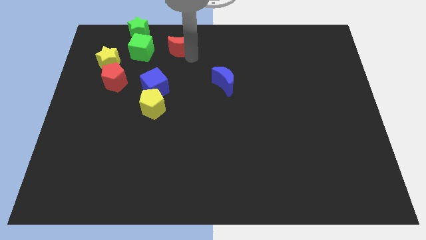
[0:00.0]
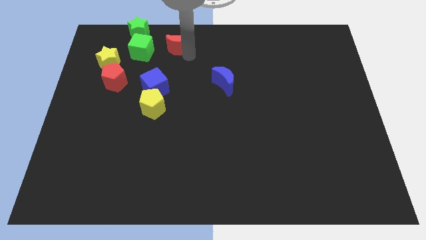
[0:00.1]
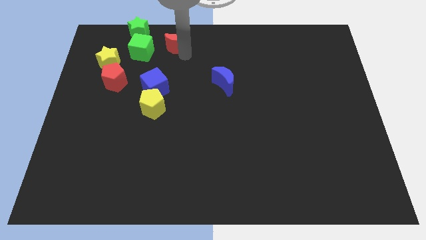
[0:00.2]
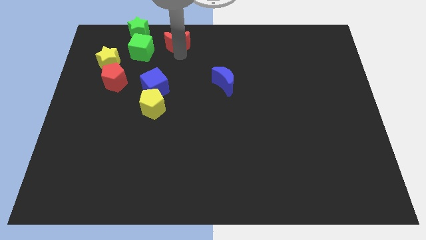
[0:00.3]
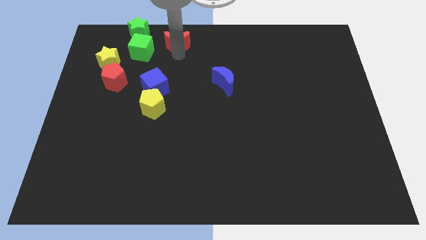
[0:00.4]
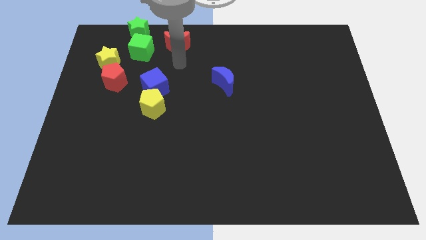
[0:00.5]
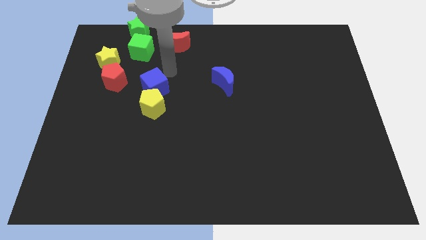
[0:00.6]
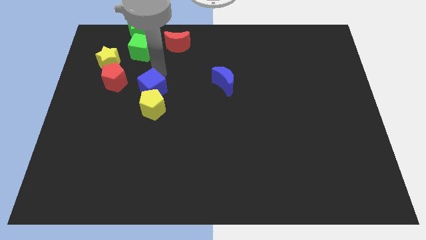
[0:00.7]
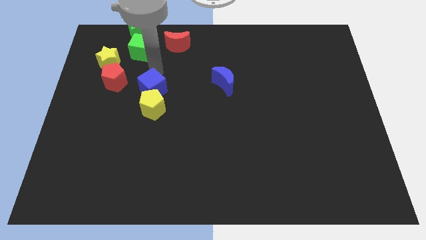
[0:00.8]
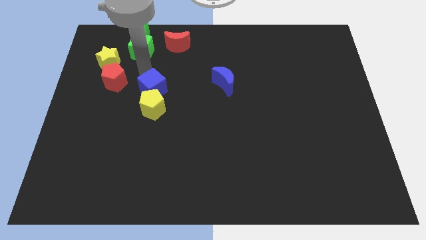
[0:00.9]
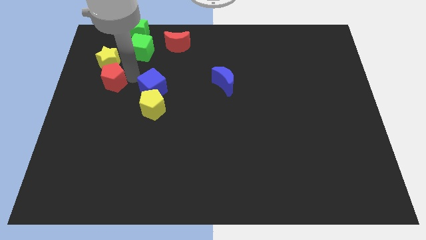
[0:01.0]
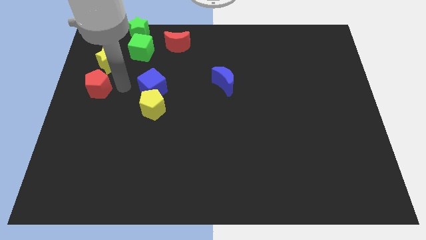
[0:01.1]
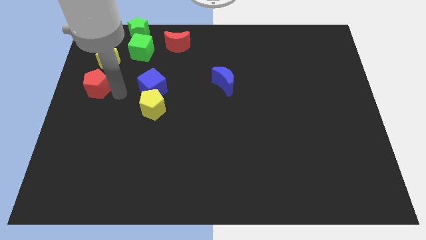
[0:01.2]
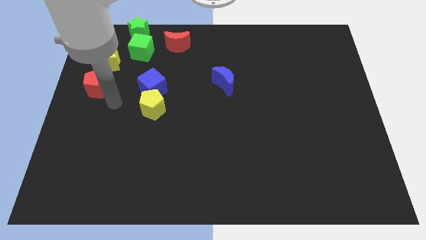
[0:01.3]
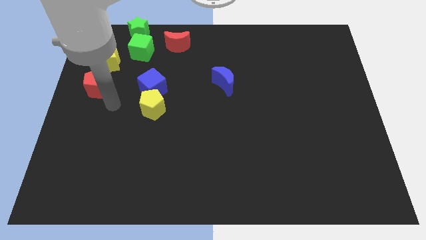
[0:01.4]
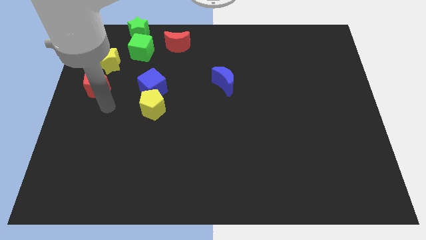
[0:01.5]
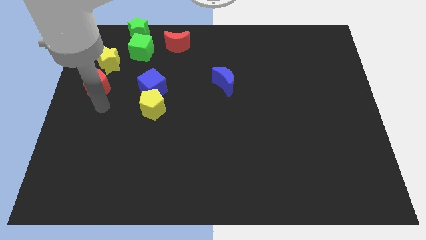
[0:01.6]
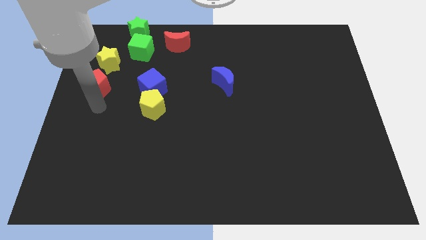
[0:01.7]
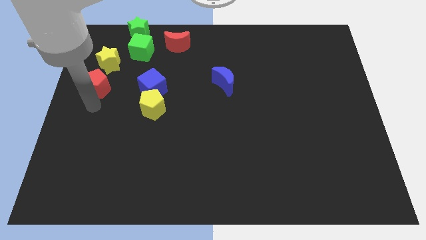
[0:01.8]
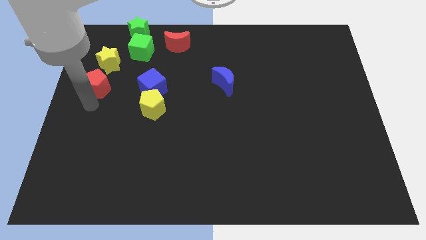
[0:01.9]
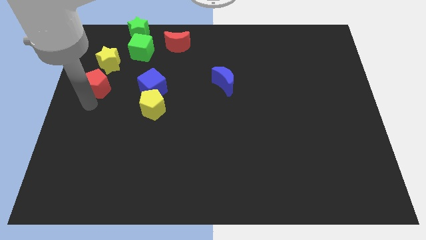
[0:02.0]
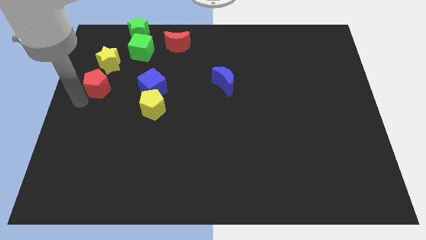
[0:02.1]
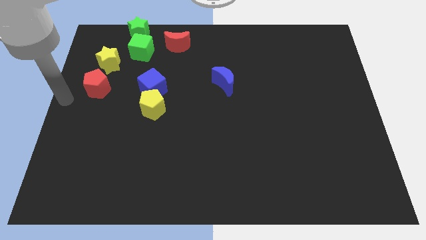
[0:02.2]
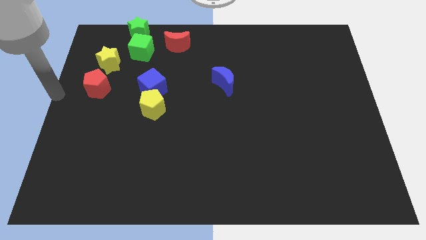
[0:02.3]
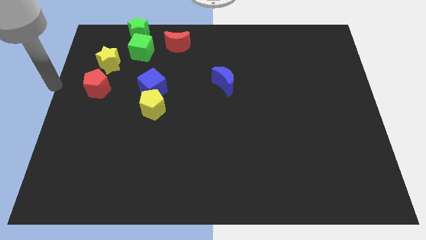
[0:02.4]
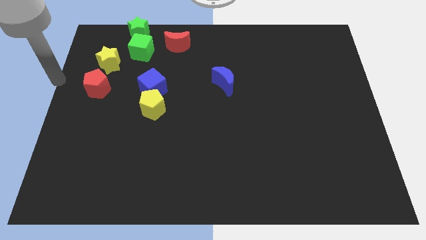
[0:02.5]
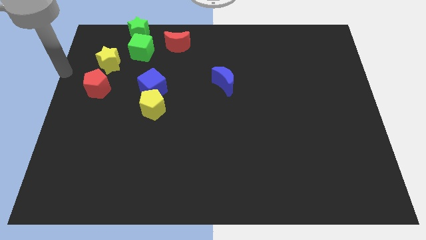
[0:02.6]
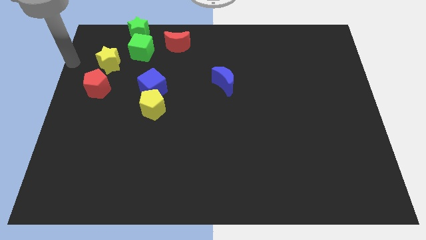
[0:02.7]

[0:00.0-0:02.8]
go and separate the red pentagon from the yellow star

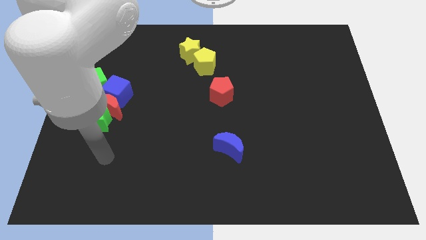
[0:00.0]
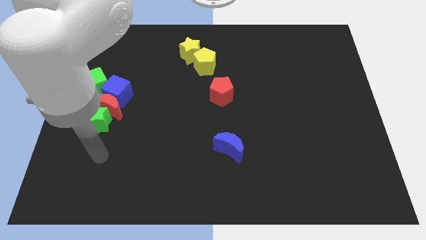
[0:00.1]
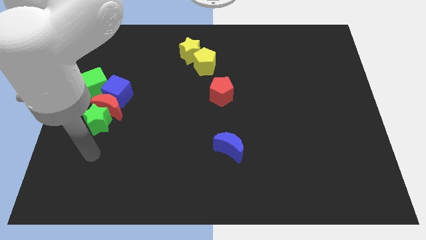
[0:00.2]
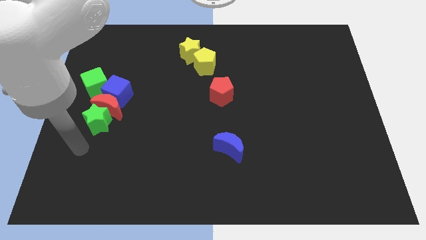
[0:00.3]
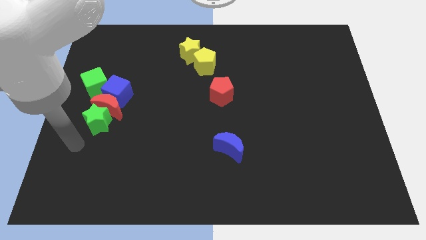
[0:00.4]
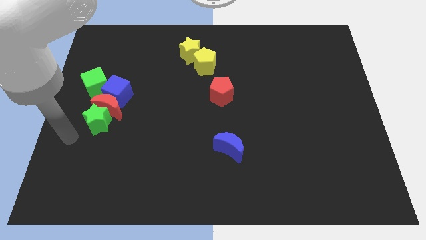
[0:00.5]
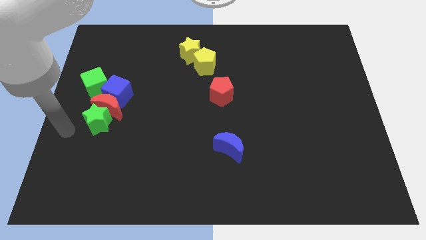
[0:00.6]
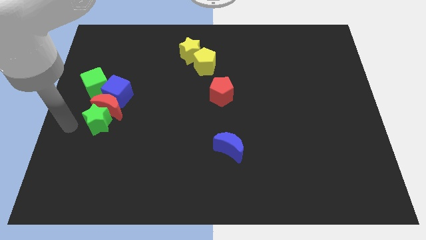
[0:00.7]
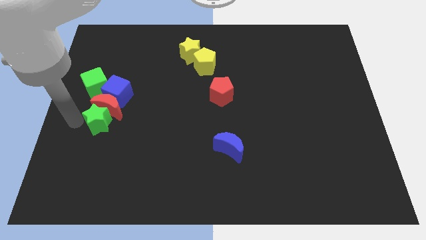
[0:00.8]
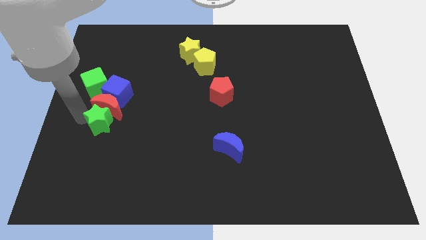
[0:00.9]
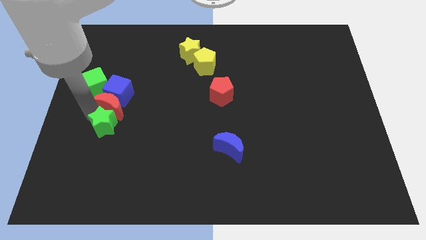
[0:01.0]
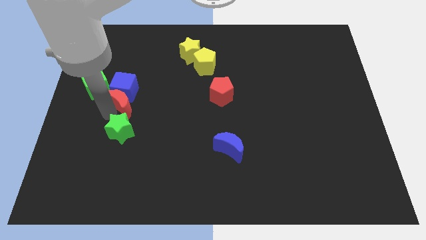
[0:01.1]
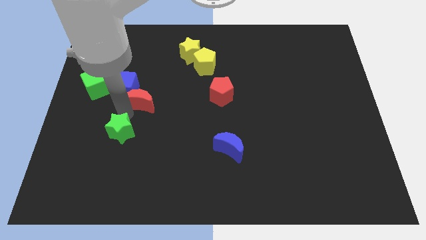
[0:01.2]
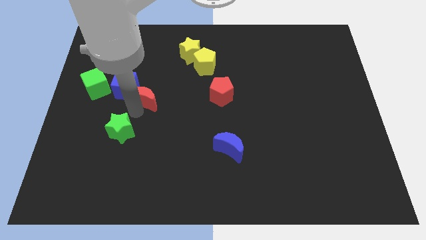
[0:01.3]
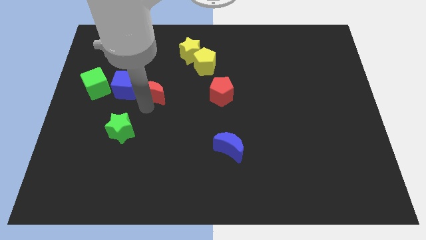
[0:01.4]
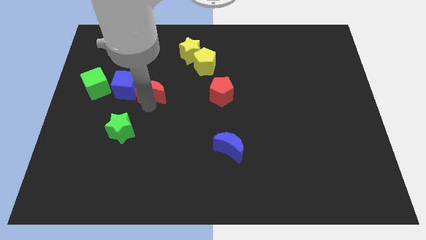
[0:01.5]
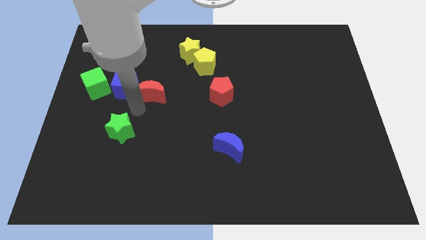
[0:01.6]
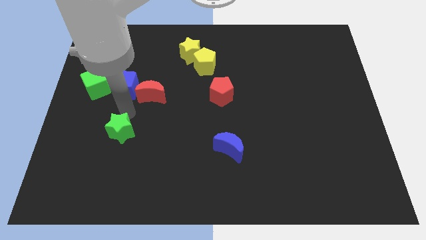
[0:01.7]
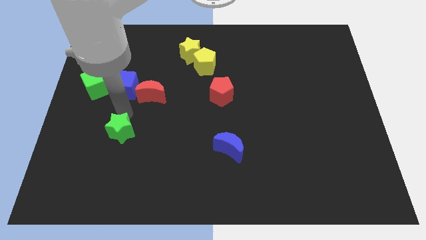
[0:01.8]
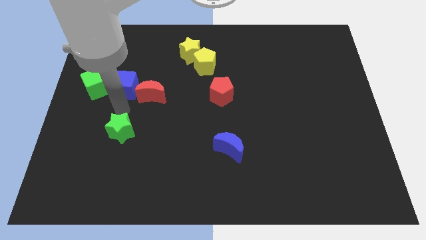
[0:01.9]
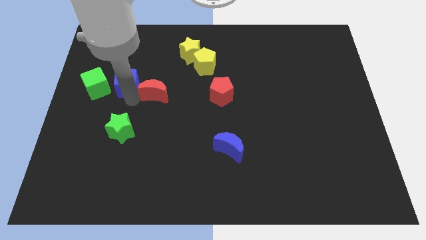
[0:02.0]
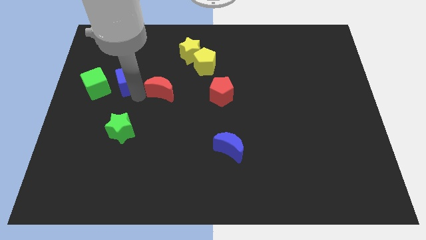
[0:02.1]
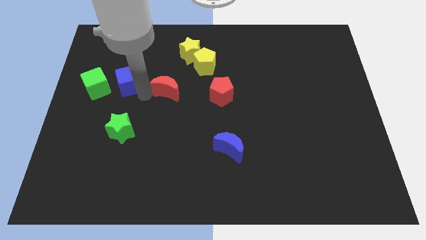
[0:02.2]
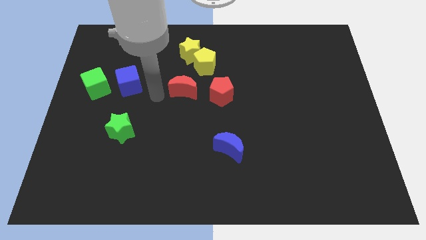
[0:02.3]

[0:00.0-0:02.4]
push red crescent beside blue cube

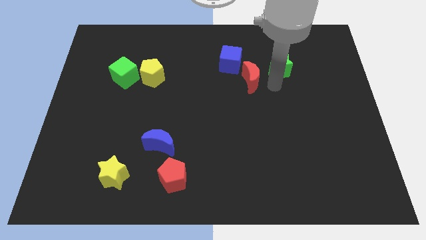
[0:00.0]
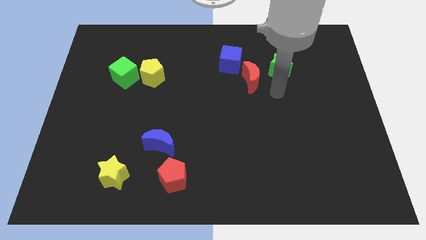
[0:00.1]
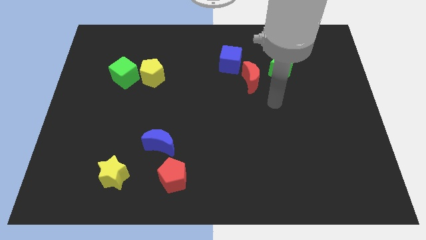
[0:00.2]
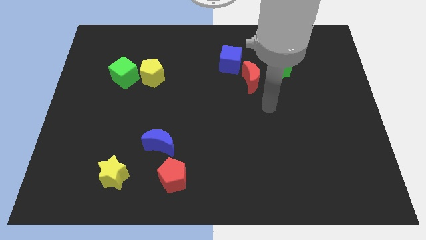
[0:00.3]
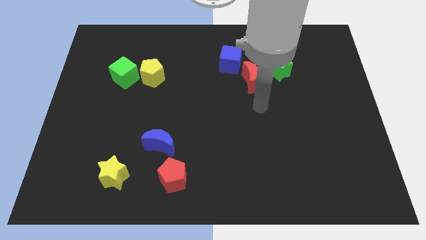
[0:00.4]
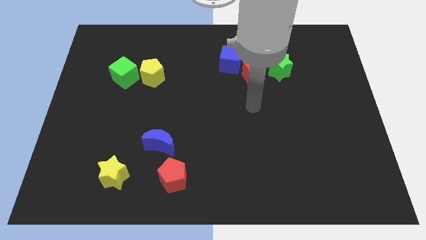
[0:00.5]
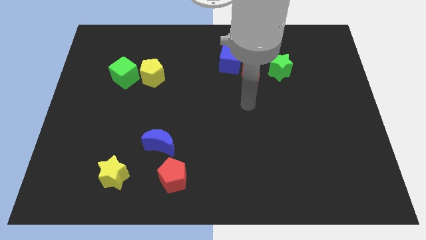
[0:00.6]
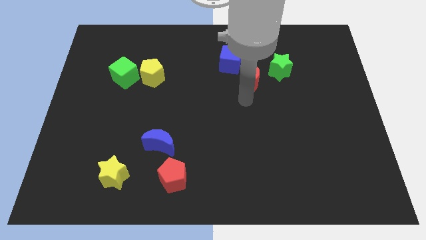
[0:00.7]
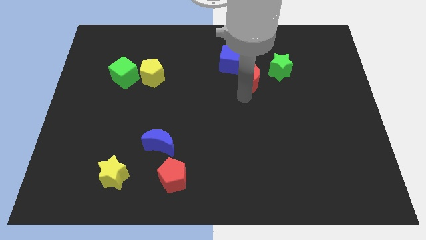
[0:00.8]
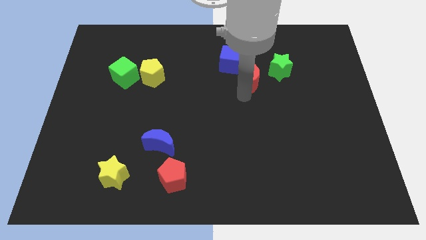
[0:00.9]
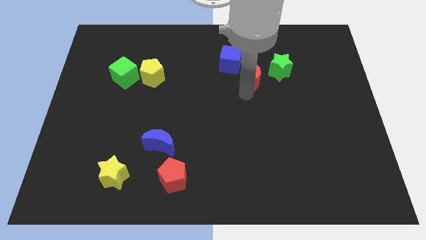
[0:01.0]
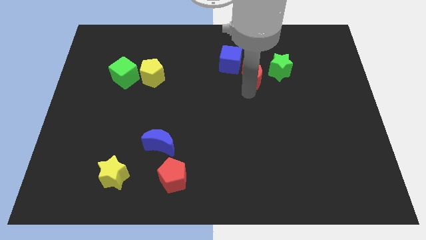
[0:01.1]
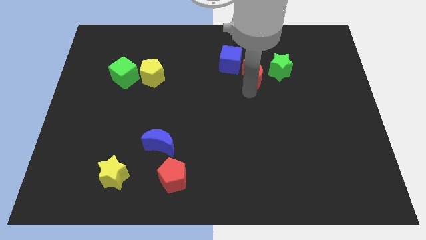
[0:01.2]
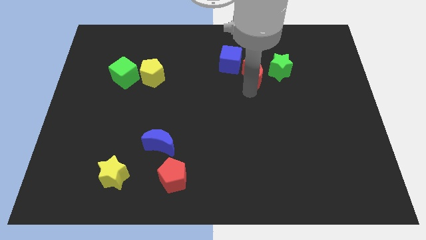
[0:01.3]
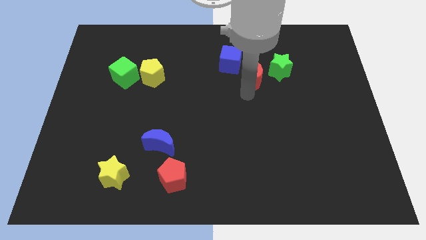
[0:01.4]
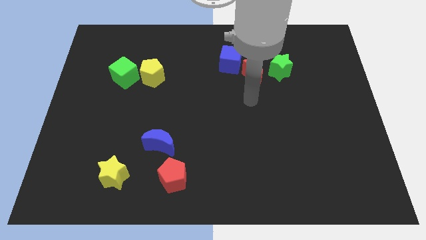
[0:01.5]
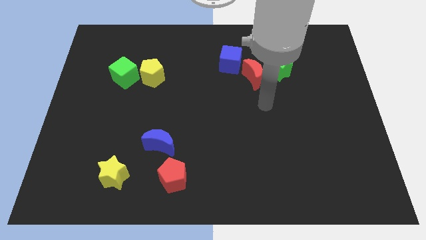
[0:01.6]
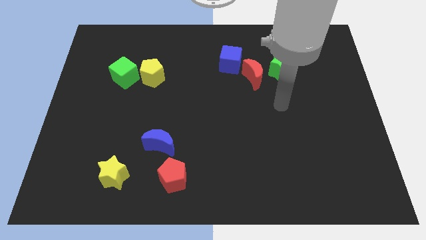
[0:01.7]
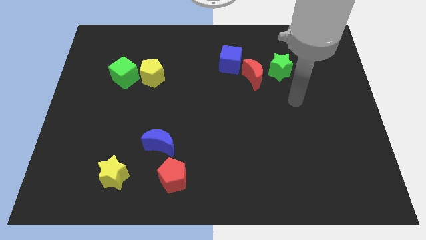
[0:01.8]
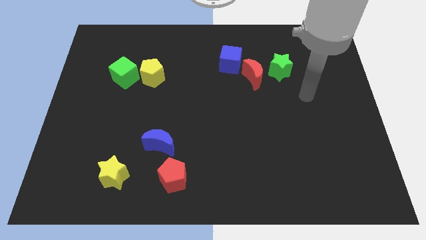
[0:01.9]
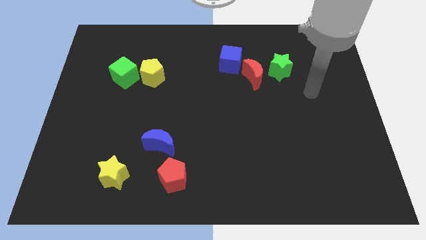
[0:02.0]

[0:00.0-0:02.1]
move your arm away from red moon

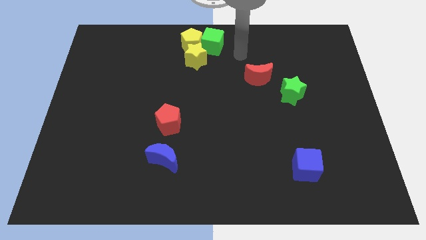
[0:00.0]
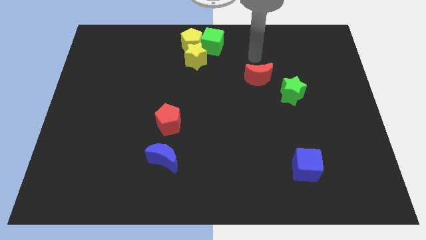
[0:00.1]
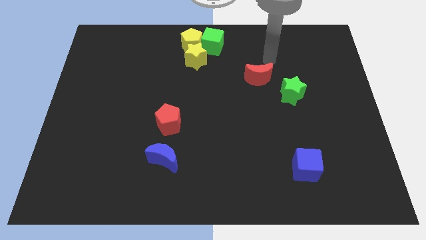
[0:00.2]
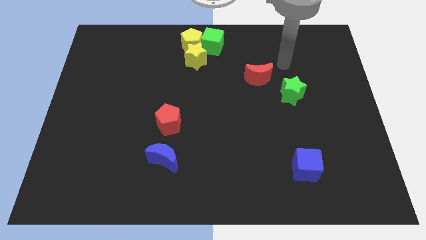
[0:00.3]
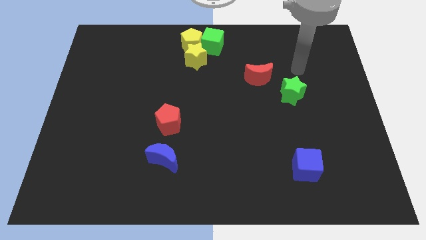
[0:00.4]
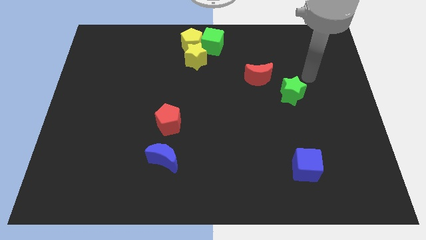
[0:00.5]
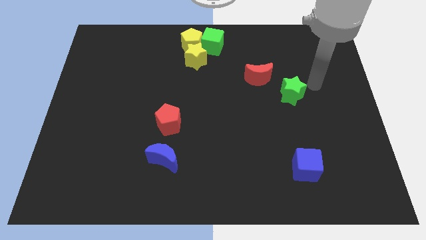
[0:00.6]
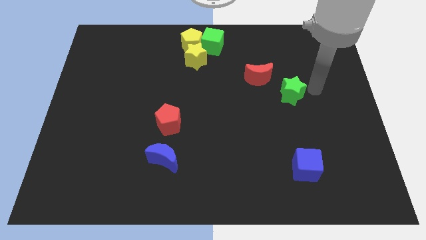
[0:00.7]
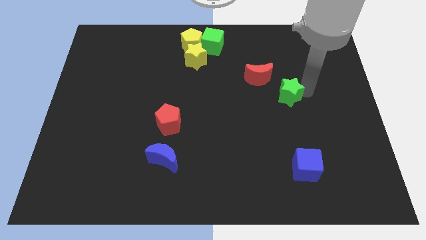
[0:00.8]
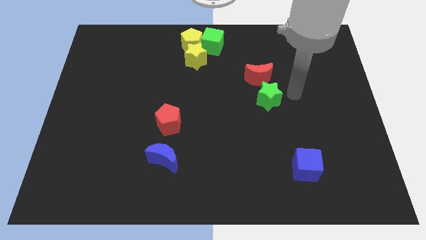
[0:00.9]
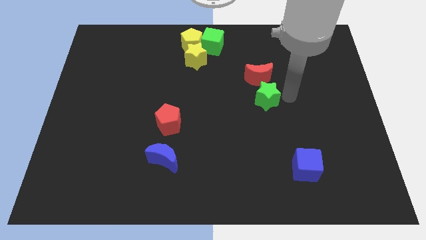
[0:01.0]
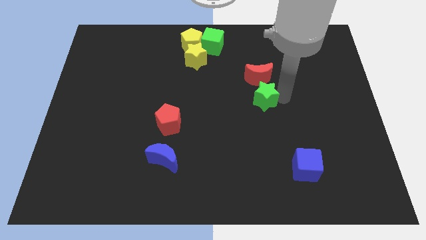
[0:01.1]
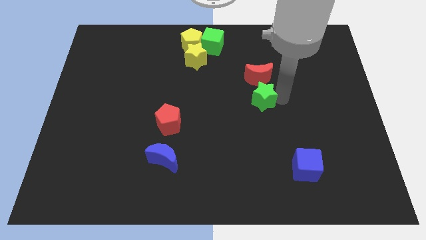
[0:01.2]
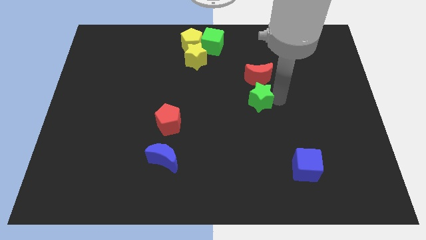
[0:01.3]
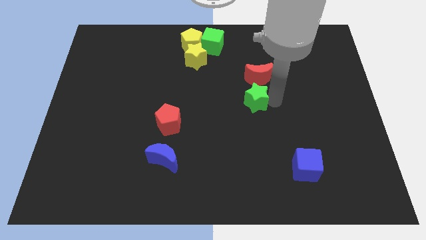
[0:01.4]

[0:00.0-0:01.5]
place the green star below the red moon

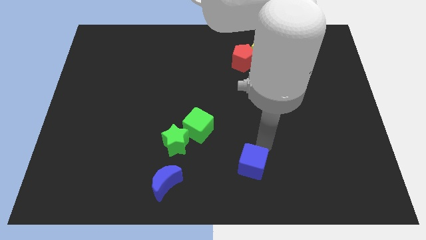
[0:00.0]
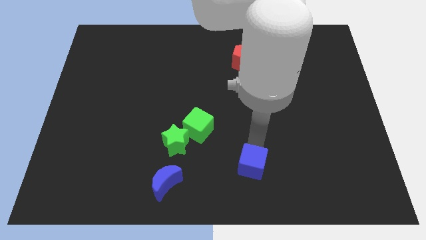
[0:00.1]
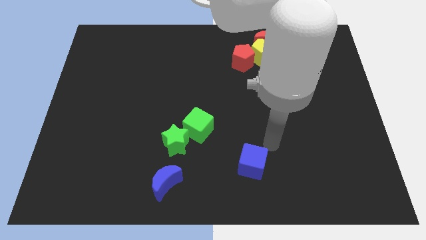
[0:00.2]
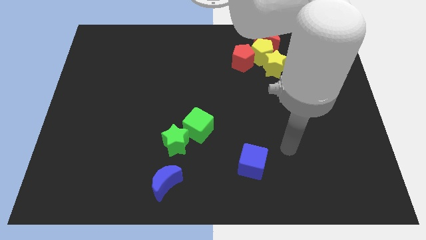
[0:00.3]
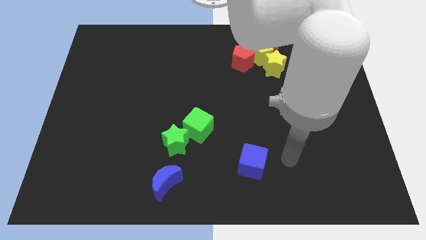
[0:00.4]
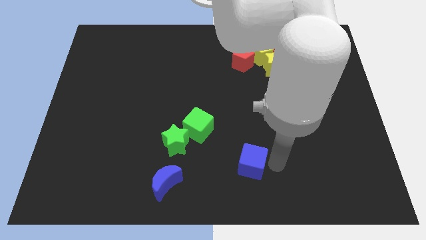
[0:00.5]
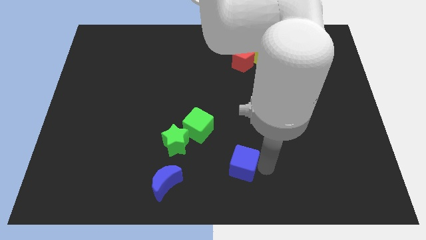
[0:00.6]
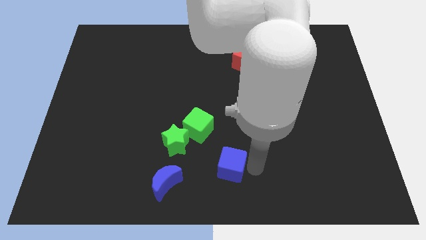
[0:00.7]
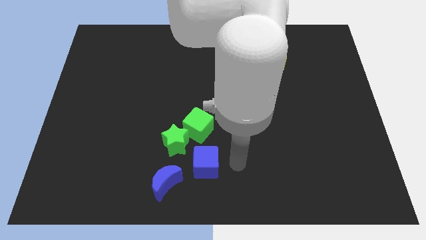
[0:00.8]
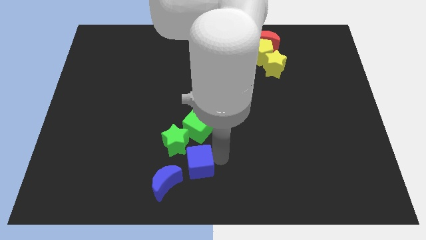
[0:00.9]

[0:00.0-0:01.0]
push blue cube below green cube
